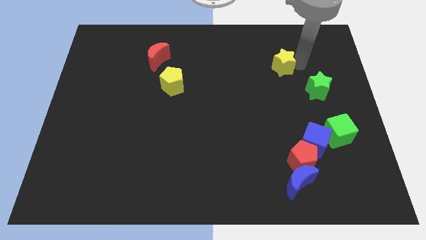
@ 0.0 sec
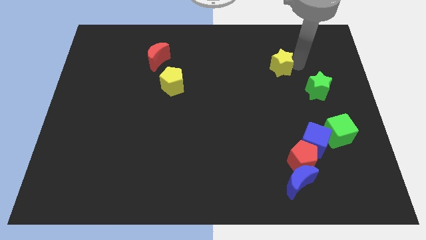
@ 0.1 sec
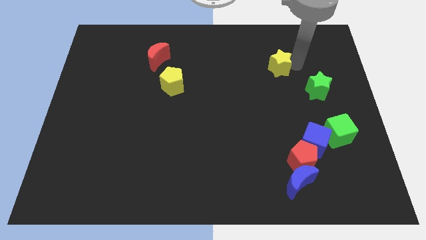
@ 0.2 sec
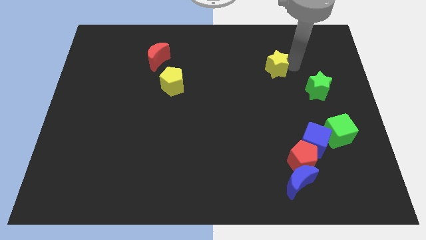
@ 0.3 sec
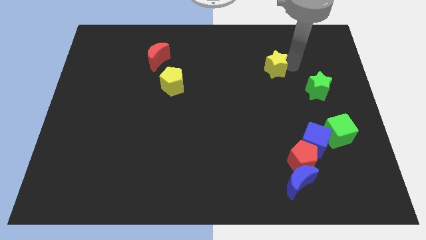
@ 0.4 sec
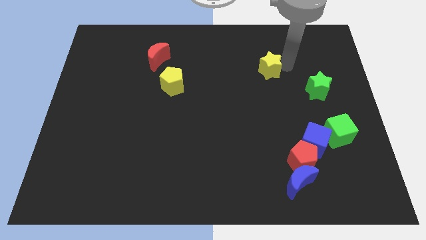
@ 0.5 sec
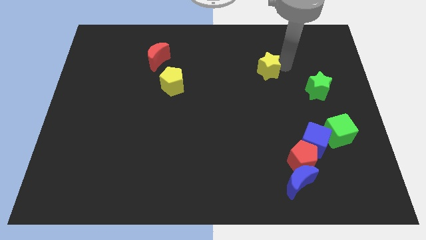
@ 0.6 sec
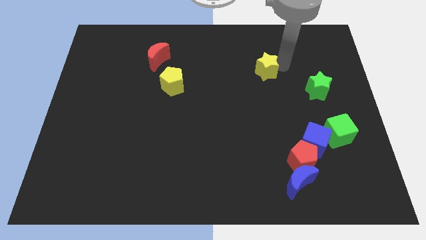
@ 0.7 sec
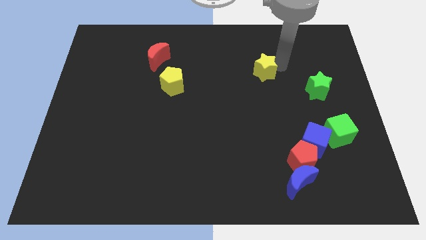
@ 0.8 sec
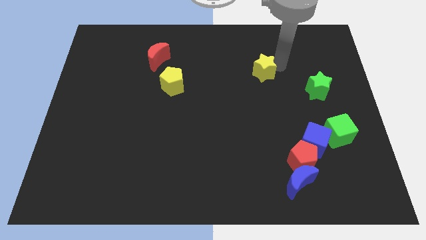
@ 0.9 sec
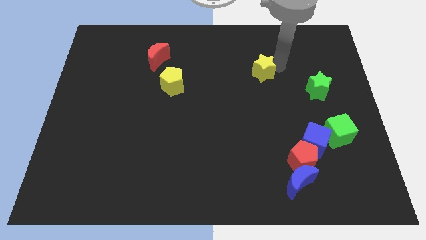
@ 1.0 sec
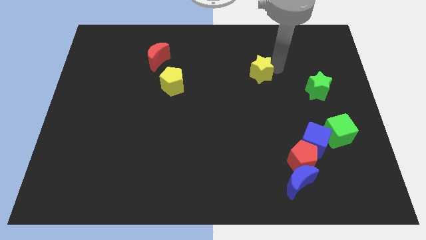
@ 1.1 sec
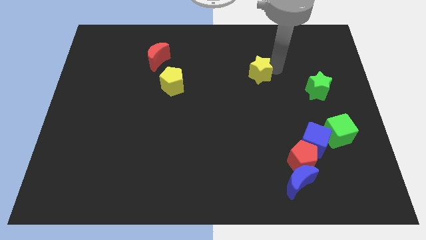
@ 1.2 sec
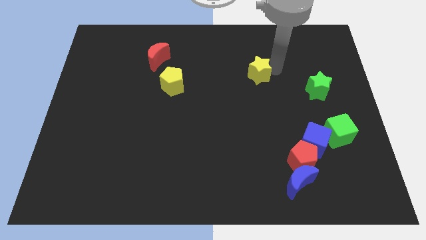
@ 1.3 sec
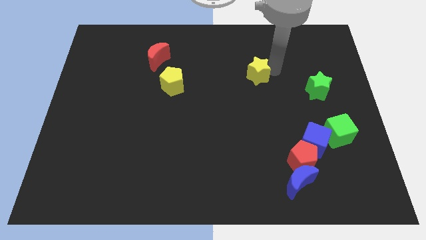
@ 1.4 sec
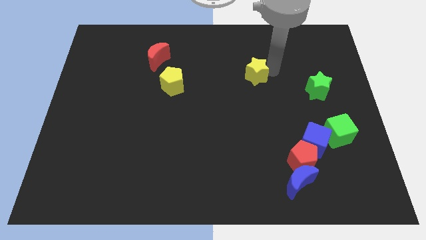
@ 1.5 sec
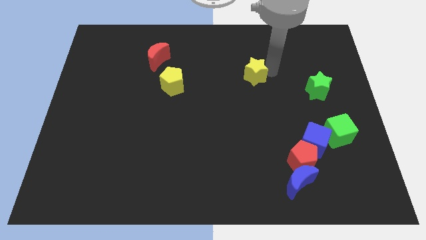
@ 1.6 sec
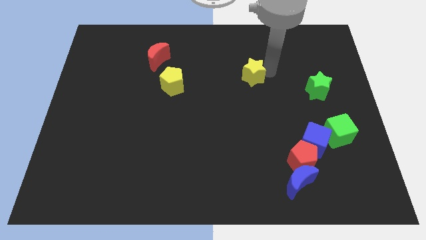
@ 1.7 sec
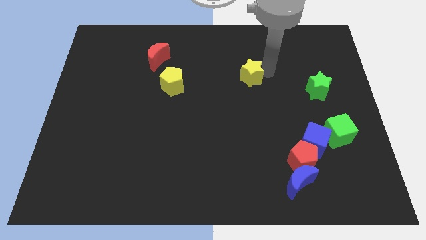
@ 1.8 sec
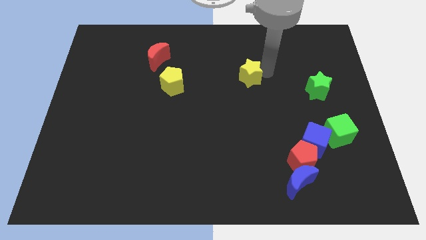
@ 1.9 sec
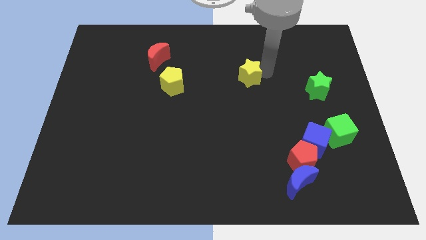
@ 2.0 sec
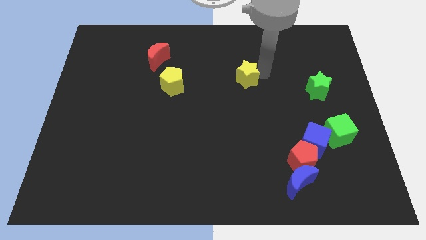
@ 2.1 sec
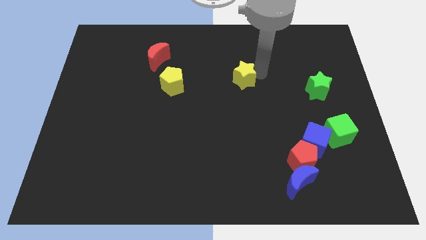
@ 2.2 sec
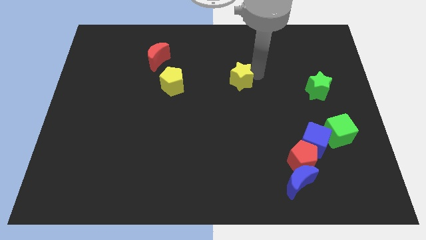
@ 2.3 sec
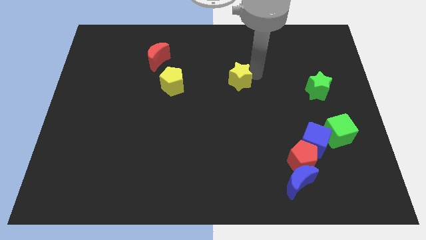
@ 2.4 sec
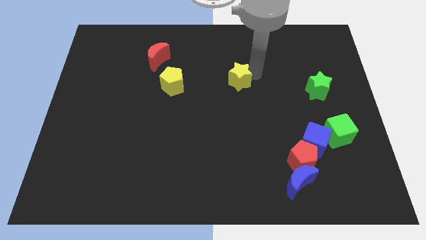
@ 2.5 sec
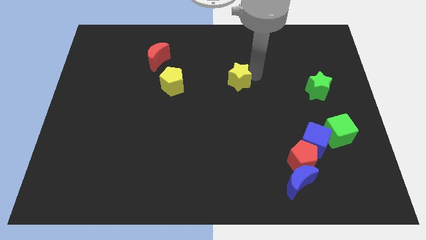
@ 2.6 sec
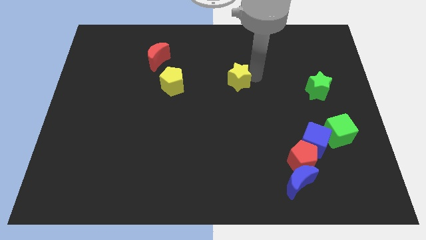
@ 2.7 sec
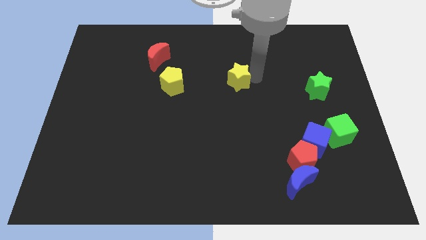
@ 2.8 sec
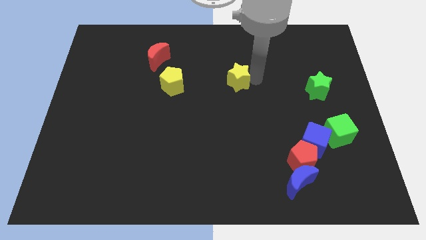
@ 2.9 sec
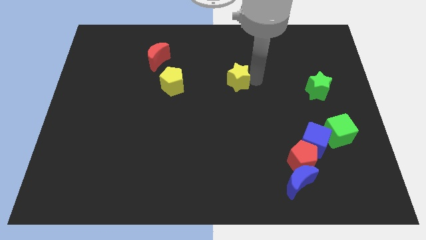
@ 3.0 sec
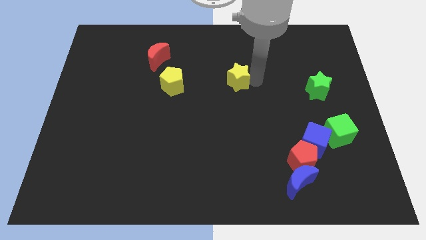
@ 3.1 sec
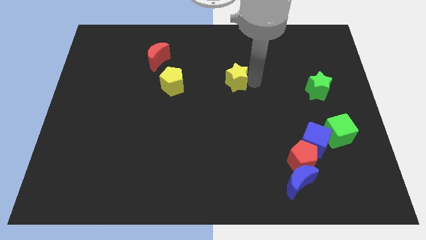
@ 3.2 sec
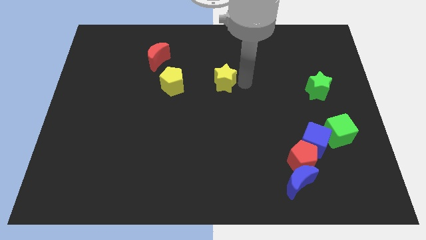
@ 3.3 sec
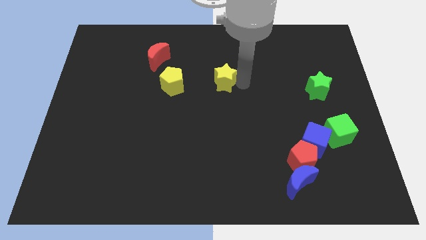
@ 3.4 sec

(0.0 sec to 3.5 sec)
move the yellow star to the right of the yellow pentagon

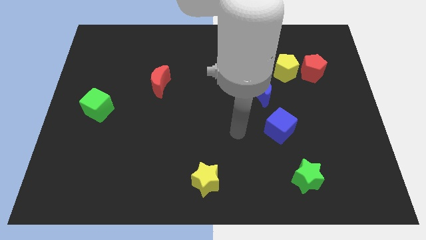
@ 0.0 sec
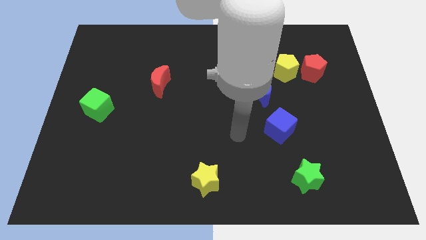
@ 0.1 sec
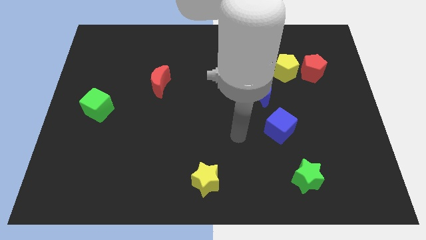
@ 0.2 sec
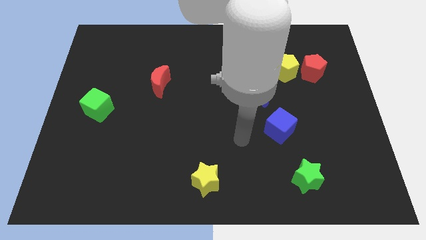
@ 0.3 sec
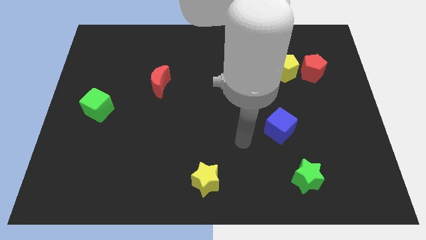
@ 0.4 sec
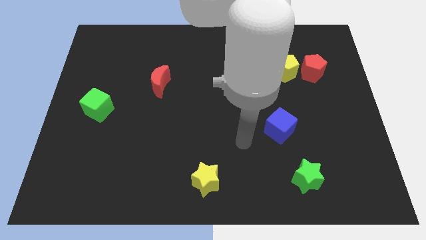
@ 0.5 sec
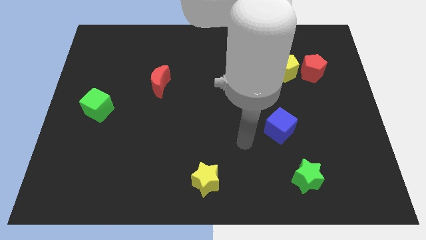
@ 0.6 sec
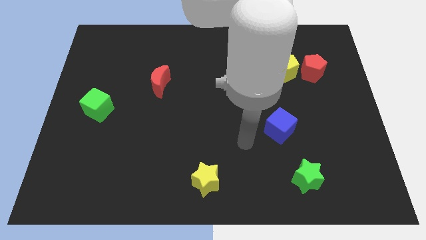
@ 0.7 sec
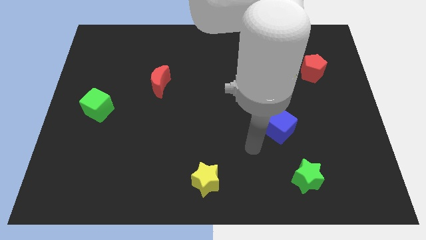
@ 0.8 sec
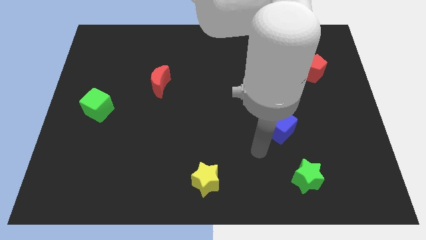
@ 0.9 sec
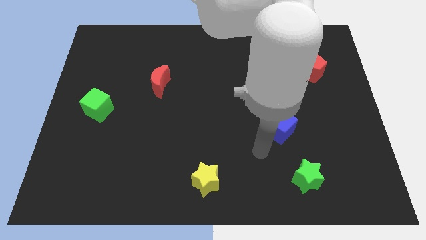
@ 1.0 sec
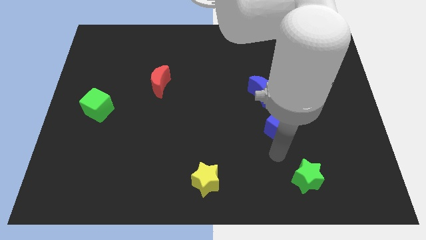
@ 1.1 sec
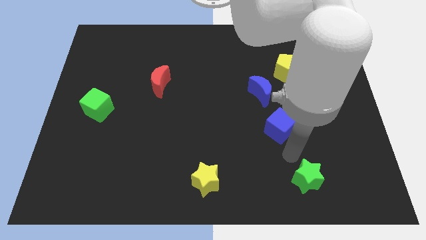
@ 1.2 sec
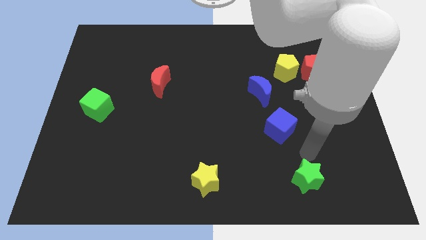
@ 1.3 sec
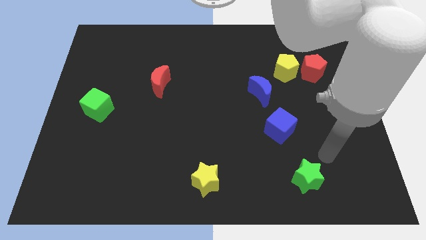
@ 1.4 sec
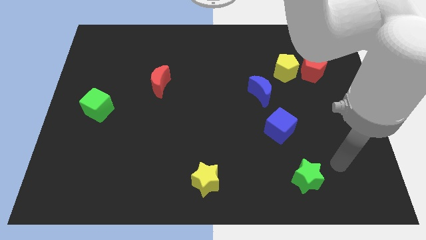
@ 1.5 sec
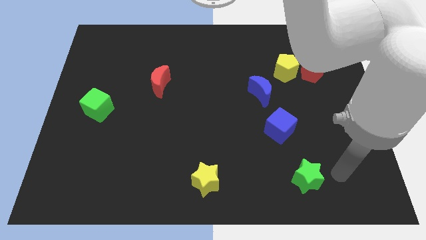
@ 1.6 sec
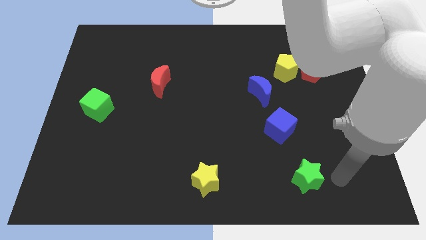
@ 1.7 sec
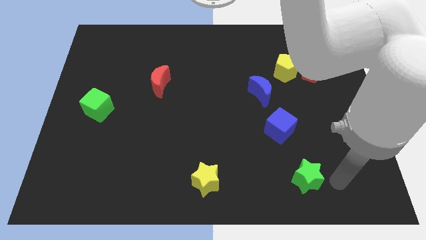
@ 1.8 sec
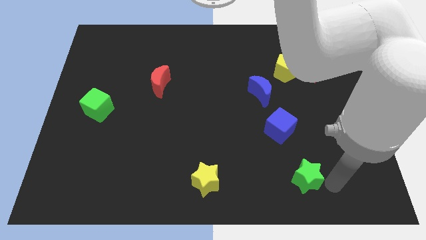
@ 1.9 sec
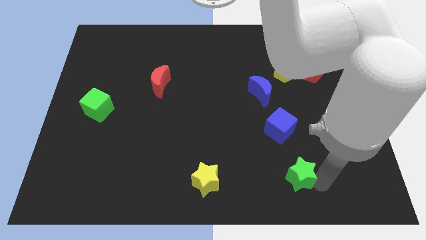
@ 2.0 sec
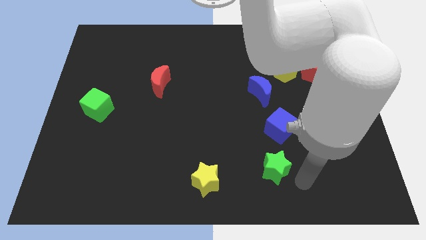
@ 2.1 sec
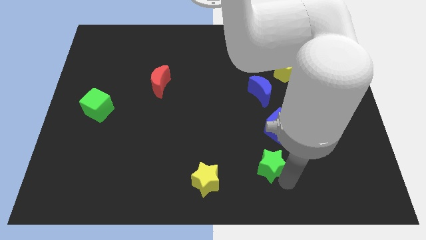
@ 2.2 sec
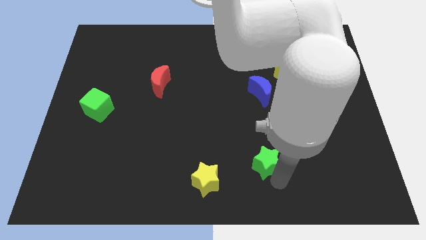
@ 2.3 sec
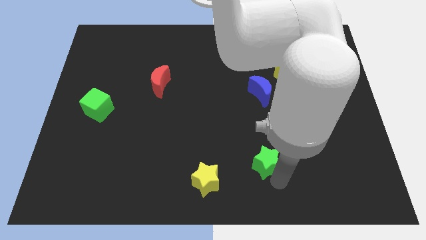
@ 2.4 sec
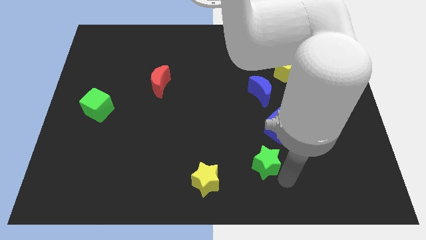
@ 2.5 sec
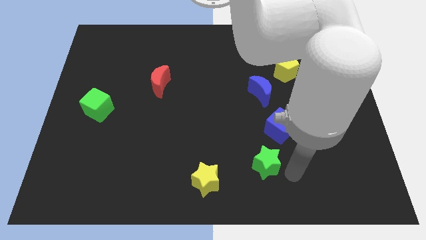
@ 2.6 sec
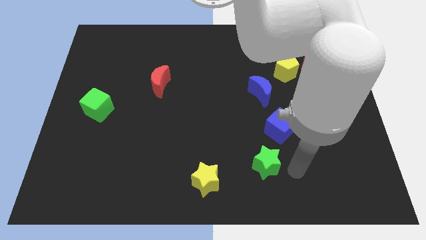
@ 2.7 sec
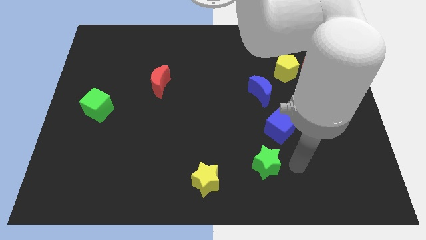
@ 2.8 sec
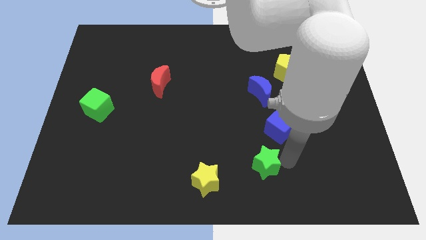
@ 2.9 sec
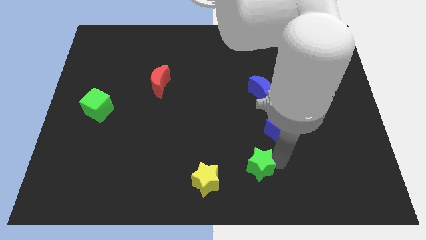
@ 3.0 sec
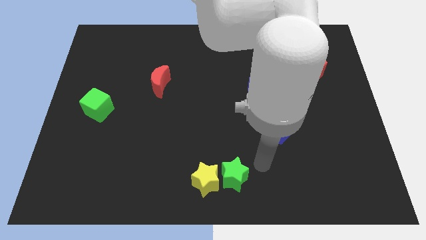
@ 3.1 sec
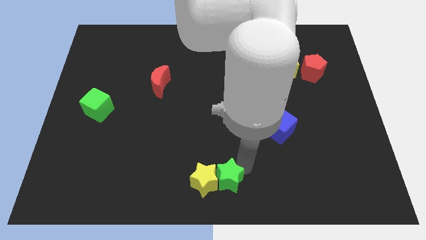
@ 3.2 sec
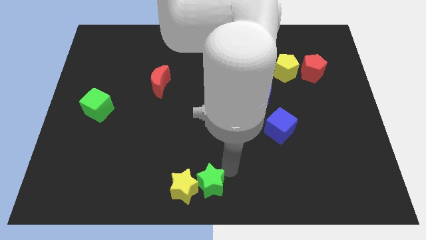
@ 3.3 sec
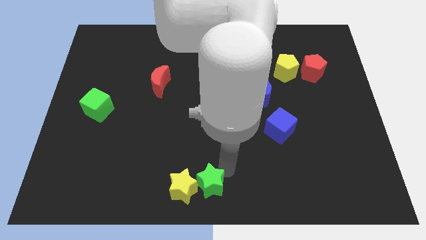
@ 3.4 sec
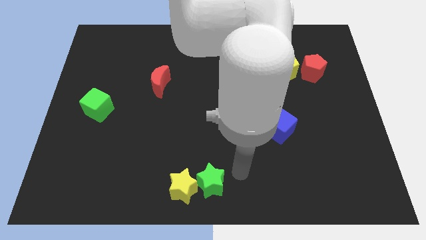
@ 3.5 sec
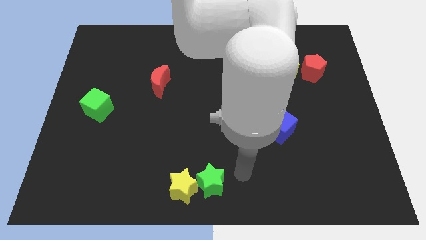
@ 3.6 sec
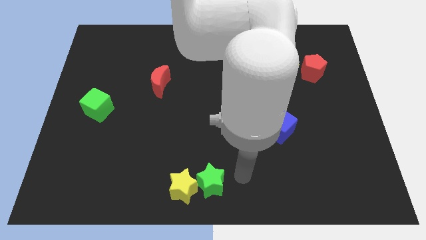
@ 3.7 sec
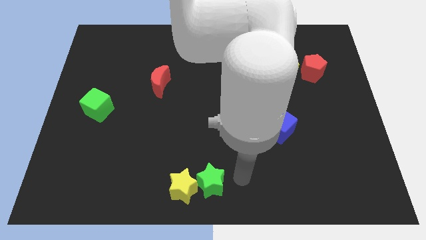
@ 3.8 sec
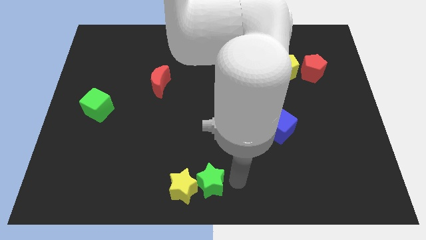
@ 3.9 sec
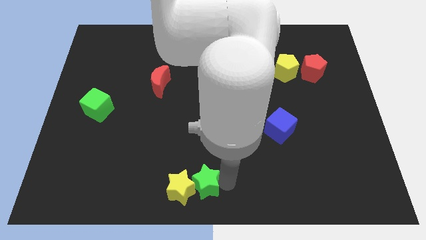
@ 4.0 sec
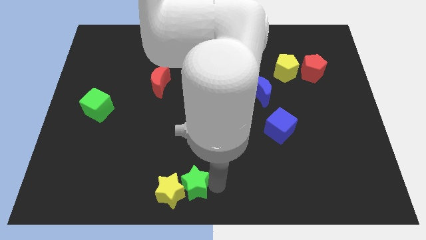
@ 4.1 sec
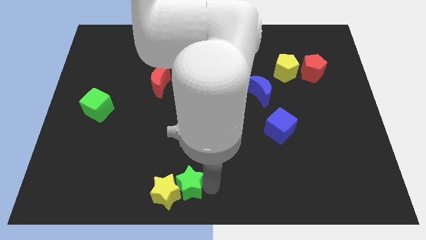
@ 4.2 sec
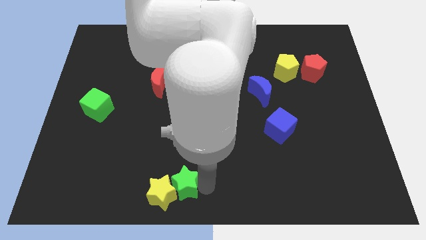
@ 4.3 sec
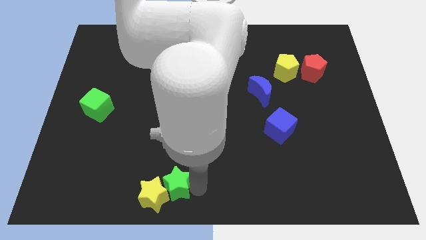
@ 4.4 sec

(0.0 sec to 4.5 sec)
push the green star into the yellow star

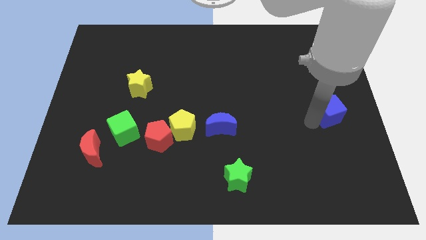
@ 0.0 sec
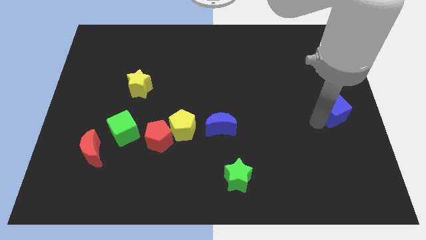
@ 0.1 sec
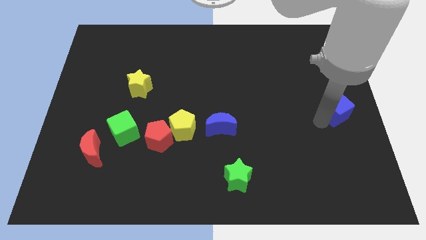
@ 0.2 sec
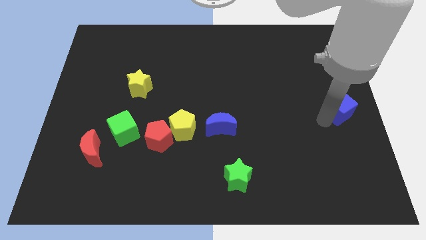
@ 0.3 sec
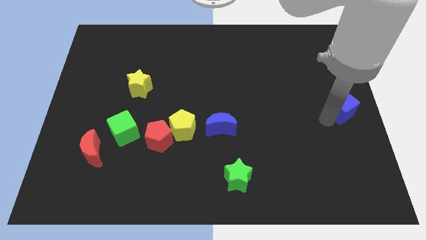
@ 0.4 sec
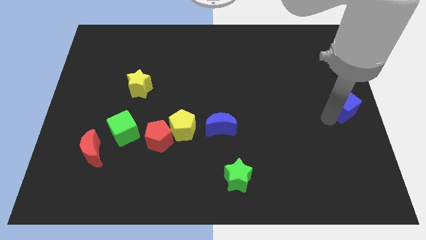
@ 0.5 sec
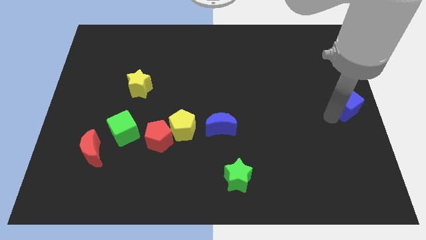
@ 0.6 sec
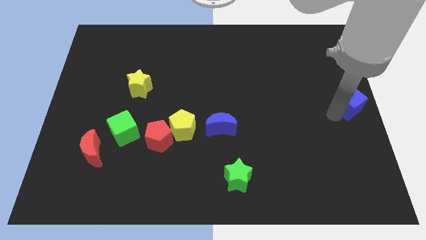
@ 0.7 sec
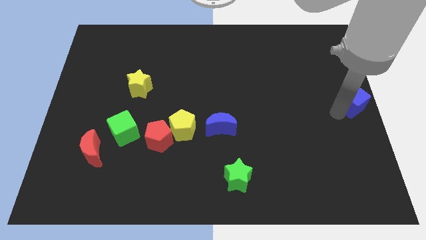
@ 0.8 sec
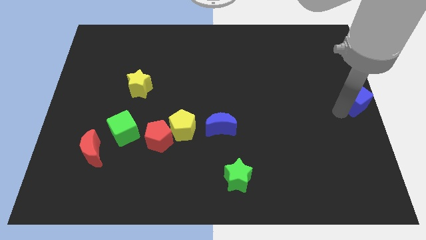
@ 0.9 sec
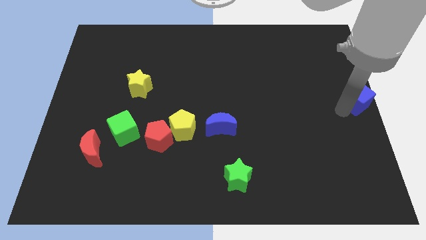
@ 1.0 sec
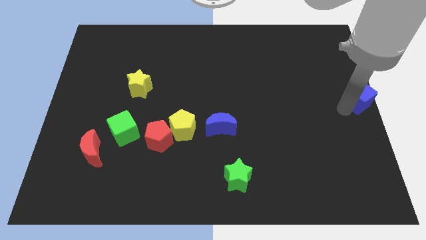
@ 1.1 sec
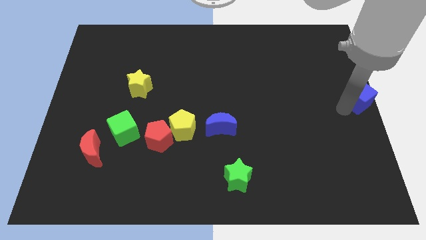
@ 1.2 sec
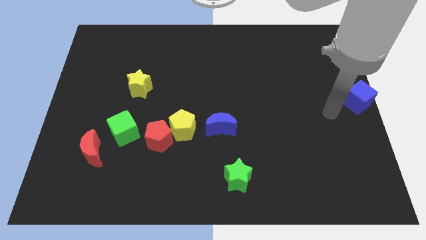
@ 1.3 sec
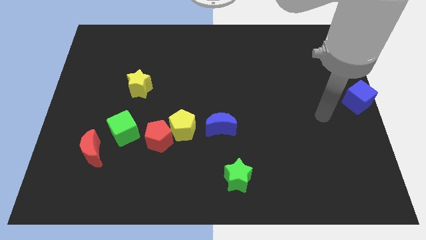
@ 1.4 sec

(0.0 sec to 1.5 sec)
place the blue cube at the center right side of the board
